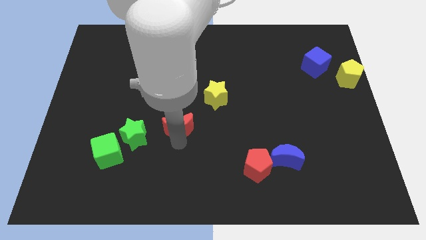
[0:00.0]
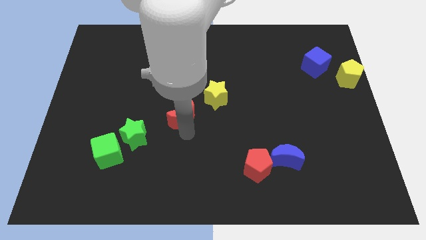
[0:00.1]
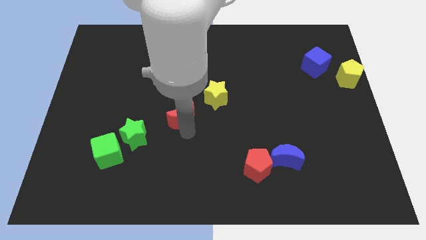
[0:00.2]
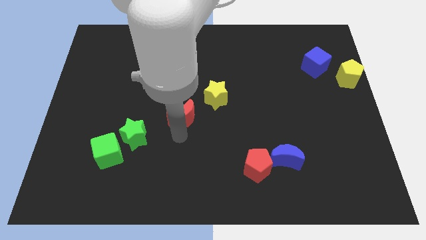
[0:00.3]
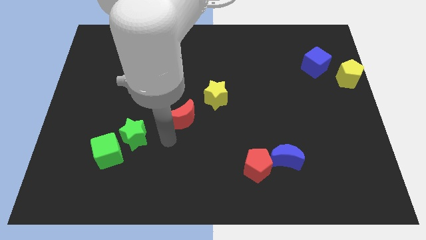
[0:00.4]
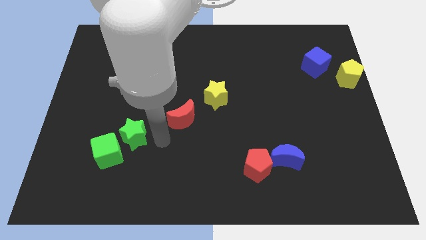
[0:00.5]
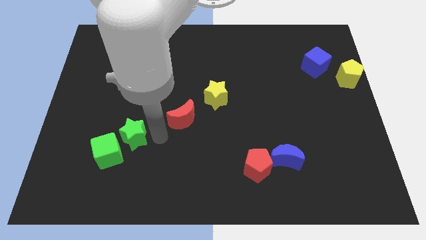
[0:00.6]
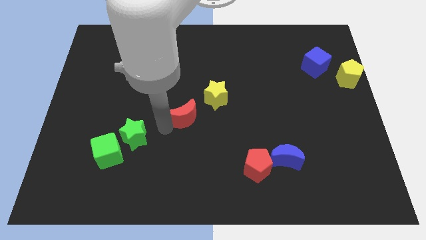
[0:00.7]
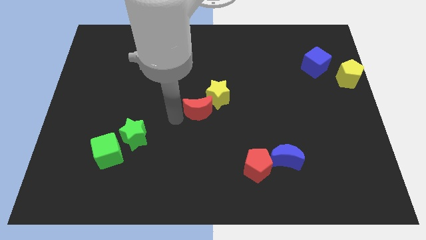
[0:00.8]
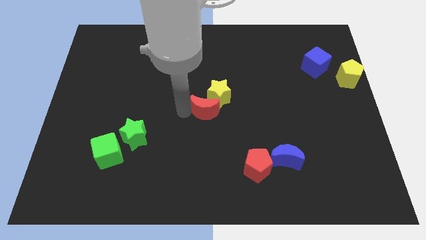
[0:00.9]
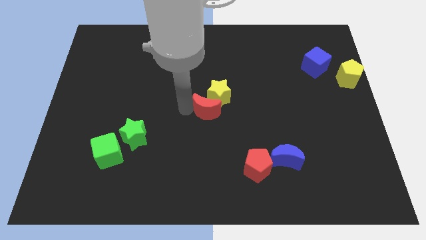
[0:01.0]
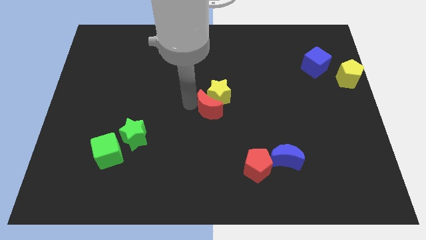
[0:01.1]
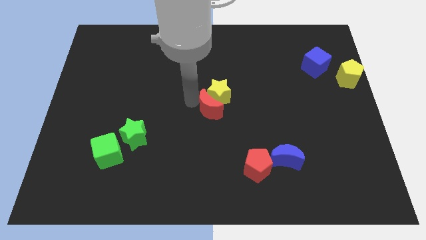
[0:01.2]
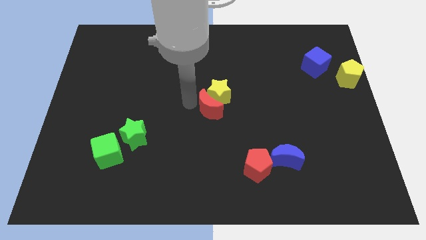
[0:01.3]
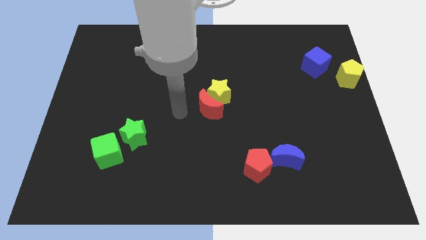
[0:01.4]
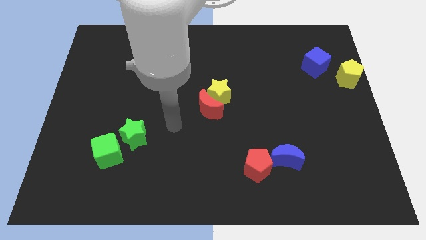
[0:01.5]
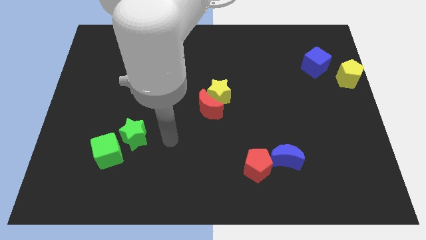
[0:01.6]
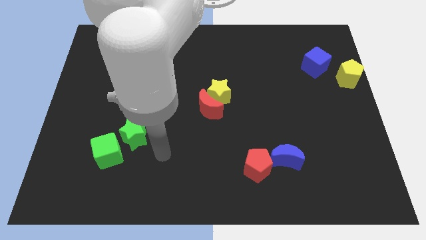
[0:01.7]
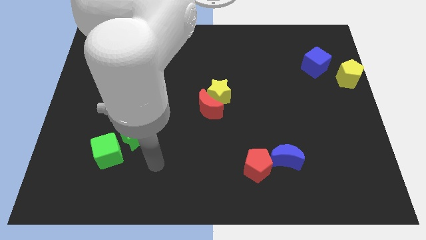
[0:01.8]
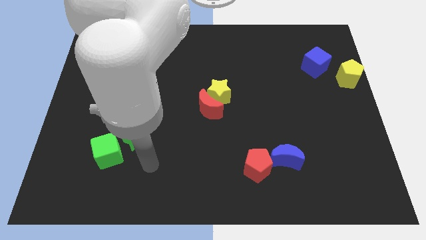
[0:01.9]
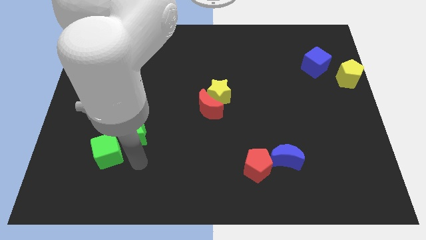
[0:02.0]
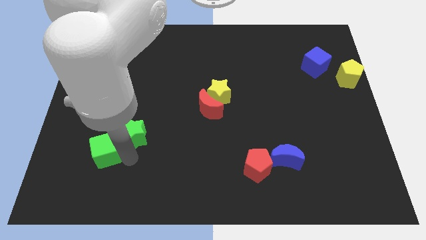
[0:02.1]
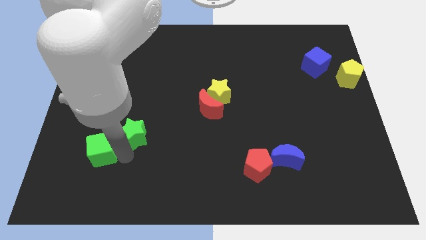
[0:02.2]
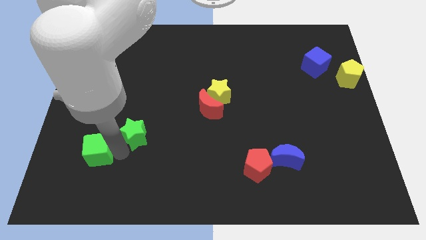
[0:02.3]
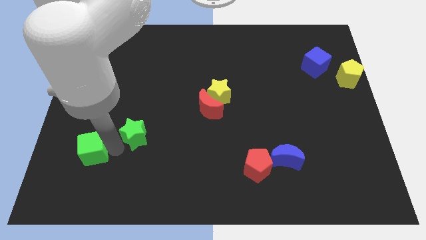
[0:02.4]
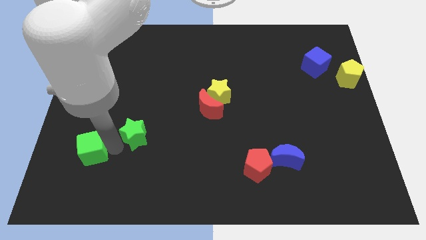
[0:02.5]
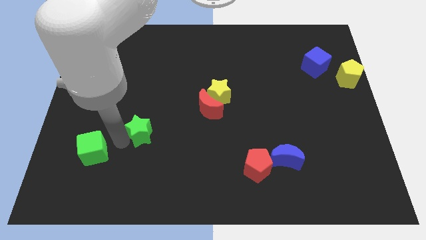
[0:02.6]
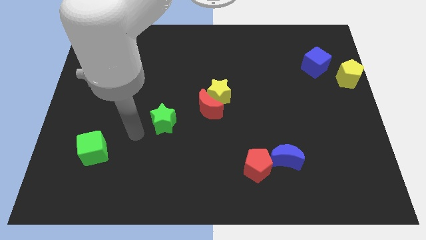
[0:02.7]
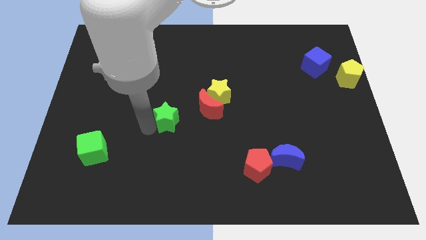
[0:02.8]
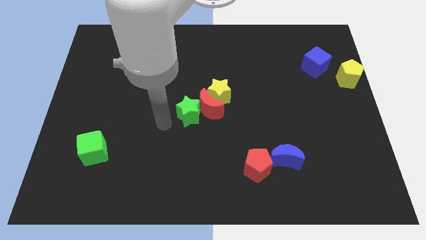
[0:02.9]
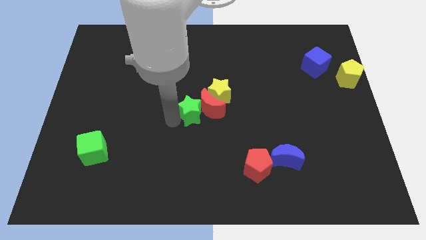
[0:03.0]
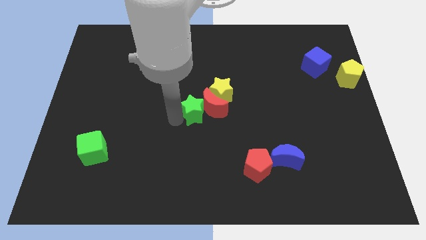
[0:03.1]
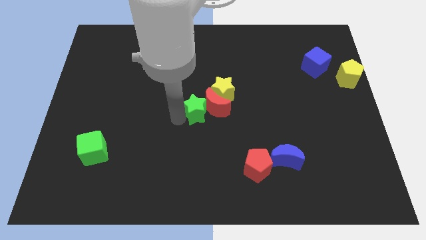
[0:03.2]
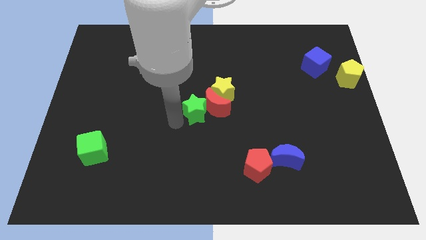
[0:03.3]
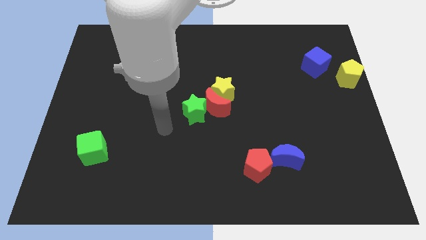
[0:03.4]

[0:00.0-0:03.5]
push red moon along with green star in to yellow star

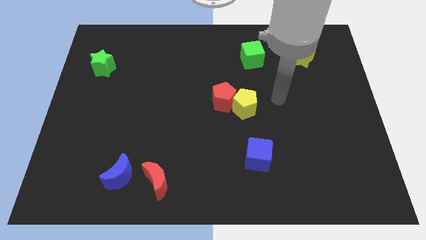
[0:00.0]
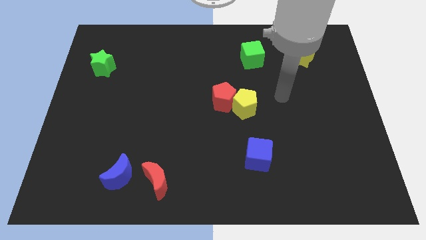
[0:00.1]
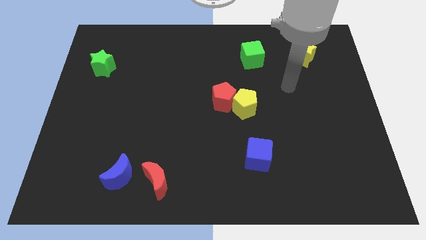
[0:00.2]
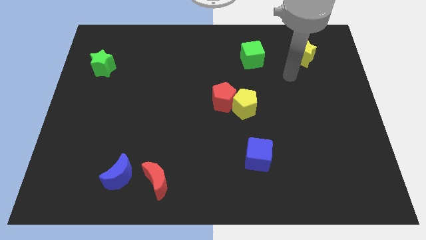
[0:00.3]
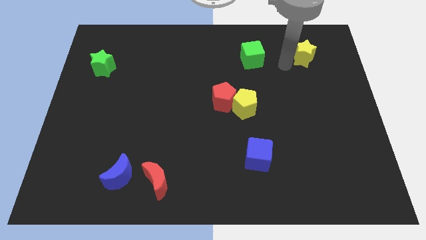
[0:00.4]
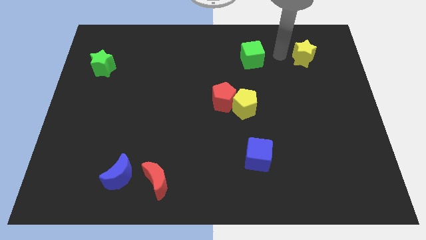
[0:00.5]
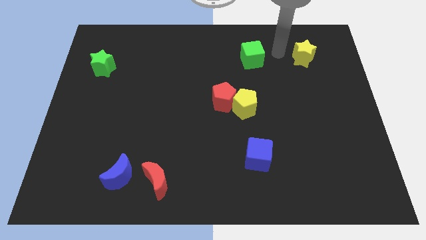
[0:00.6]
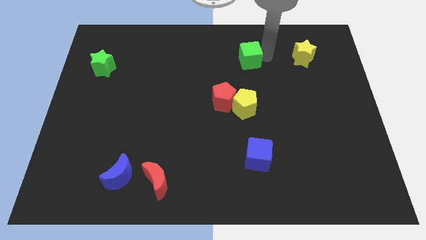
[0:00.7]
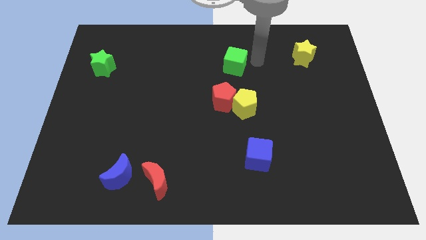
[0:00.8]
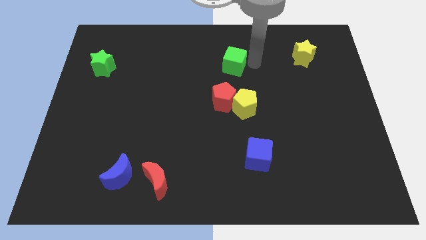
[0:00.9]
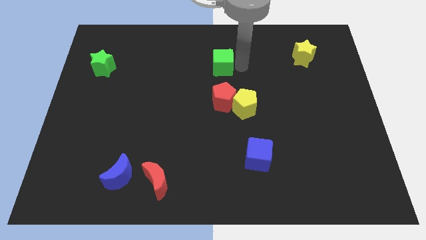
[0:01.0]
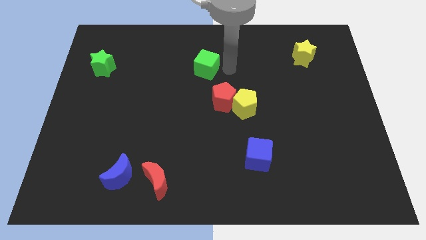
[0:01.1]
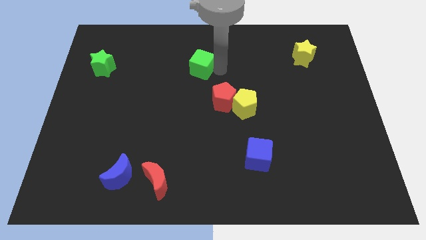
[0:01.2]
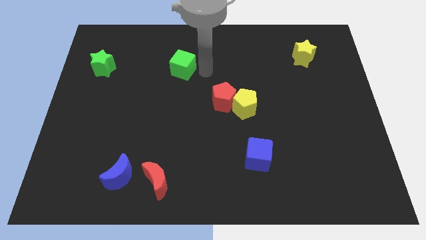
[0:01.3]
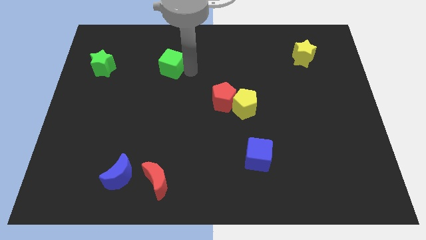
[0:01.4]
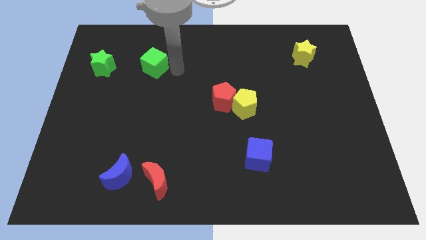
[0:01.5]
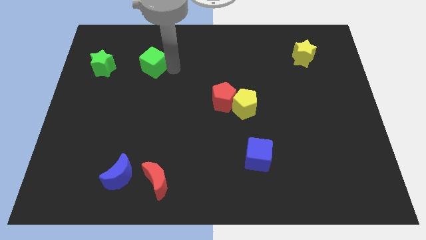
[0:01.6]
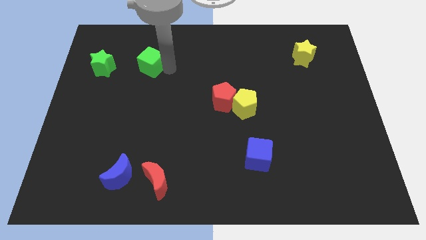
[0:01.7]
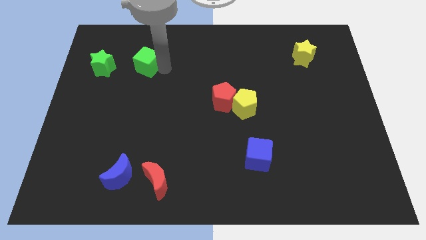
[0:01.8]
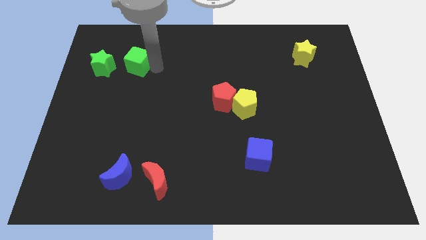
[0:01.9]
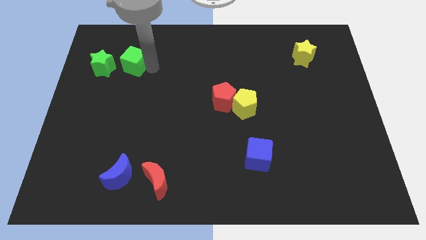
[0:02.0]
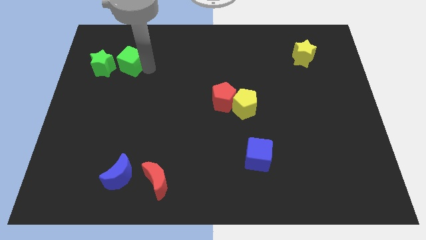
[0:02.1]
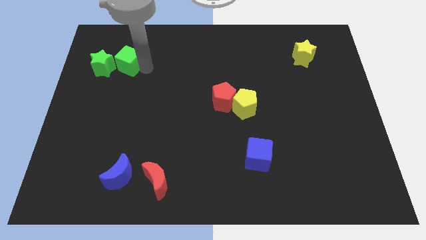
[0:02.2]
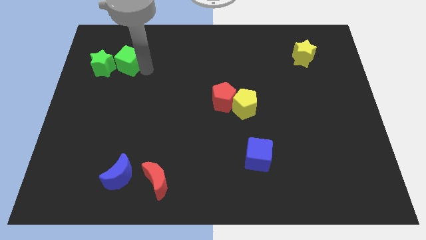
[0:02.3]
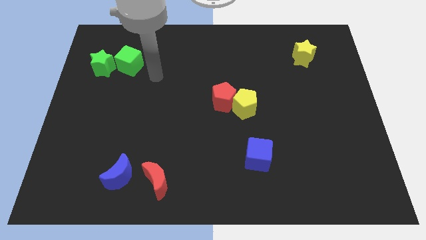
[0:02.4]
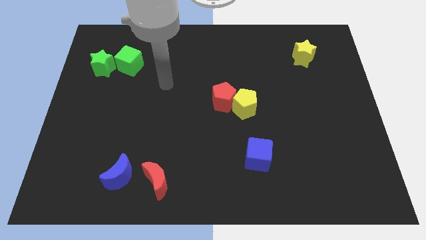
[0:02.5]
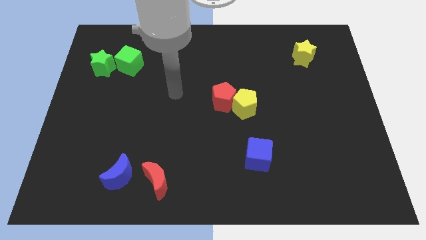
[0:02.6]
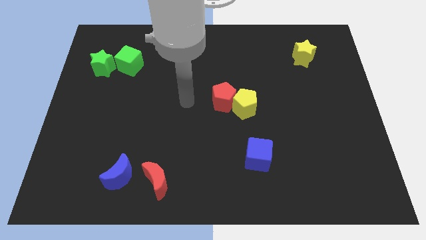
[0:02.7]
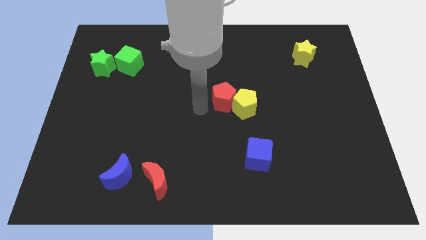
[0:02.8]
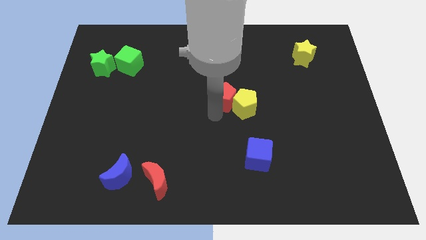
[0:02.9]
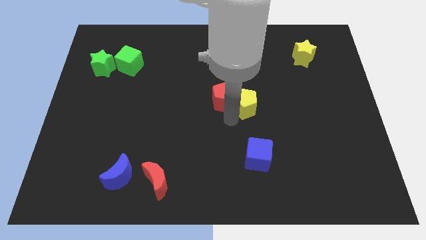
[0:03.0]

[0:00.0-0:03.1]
move green cube to the right of green star

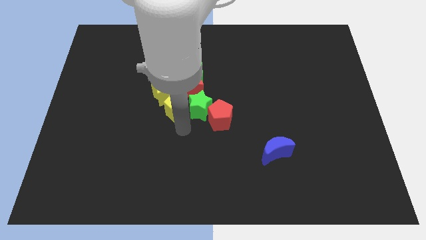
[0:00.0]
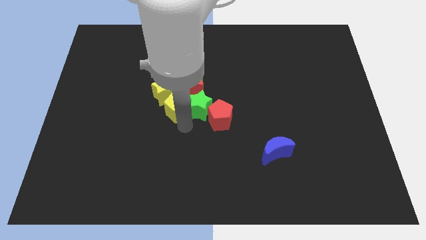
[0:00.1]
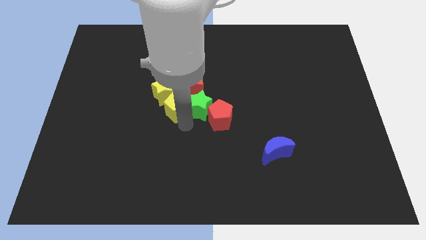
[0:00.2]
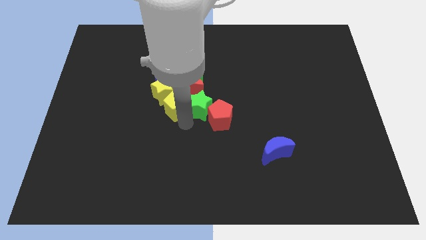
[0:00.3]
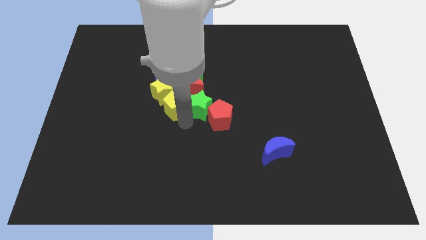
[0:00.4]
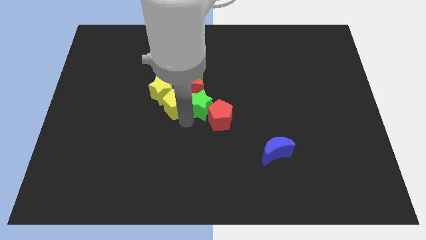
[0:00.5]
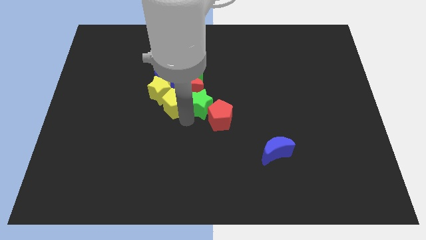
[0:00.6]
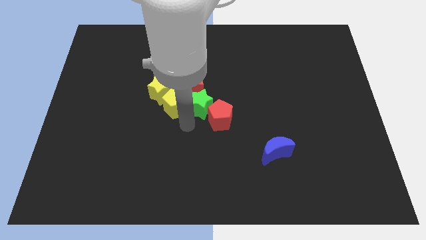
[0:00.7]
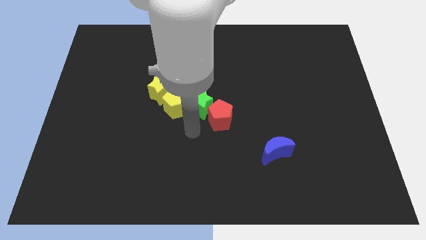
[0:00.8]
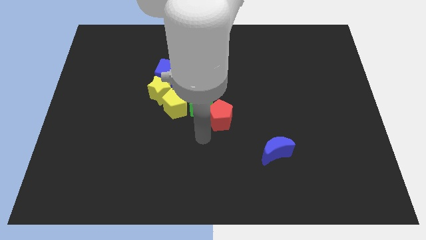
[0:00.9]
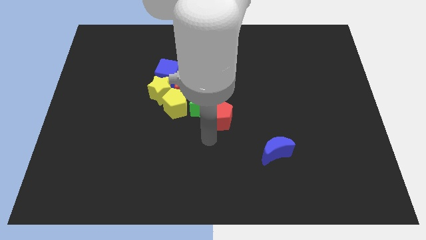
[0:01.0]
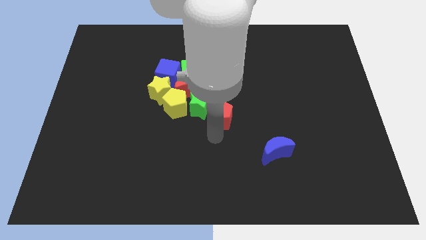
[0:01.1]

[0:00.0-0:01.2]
push the yellow pentagon into yellow star

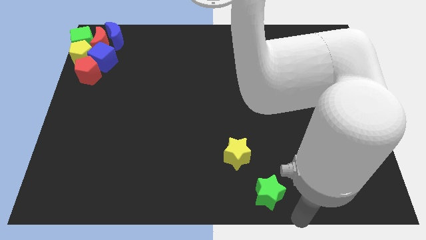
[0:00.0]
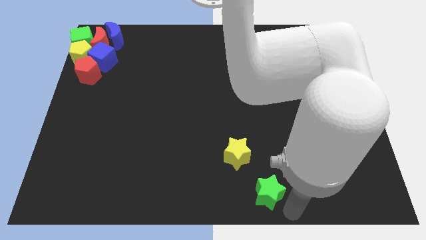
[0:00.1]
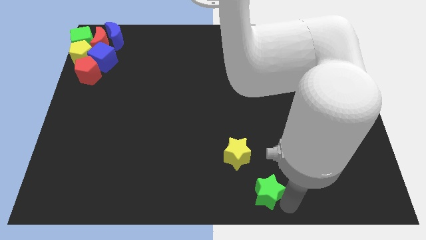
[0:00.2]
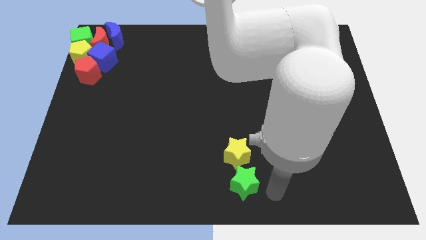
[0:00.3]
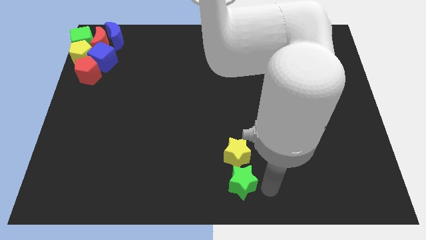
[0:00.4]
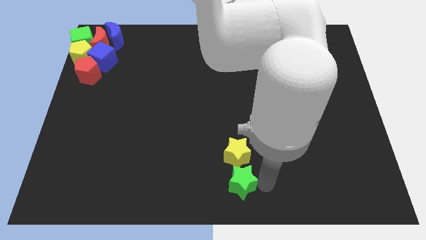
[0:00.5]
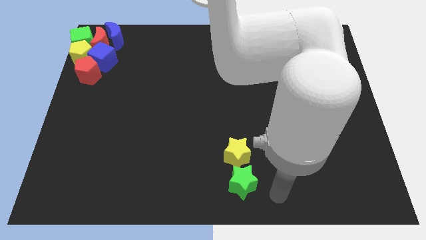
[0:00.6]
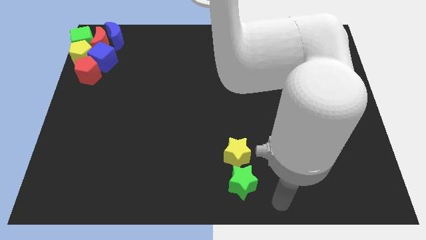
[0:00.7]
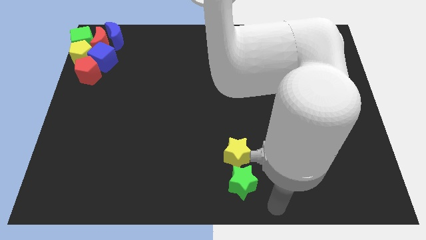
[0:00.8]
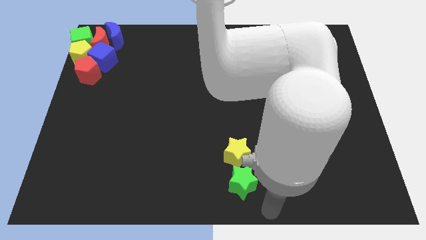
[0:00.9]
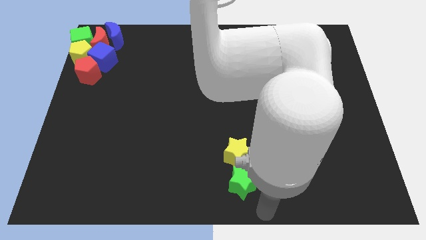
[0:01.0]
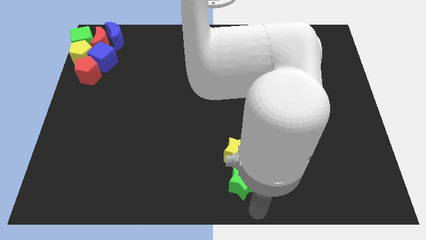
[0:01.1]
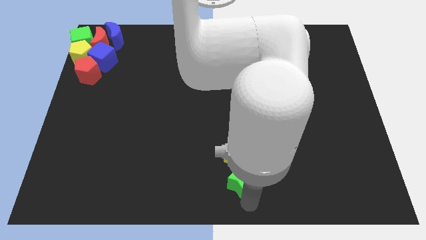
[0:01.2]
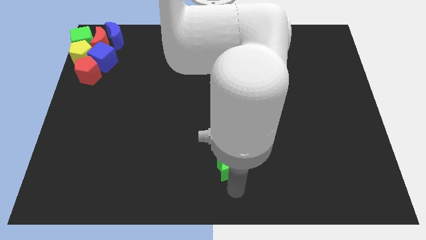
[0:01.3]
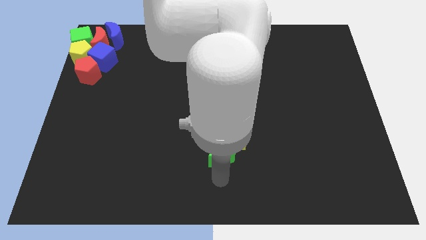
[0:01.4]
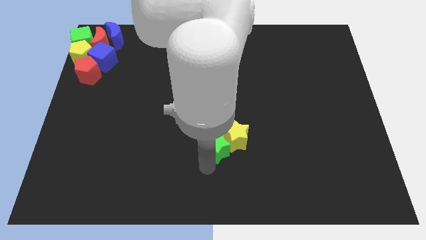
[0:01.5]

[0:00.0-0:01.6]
push both the stars slightly to the top side of the board
